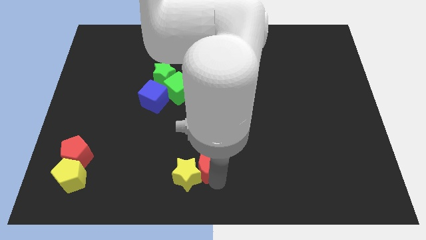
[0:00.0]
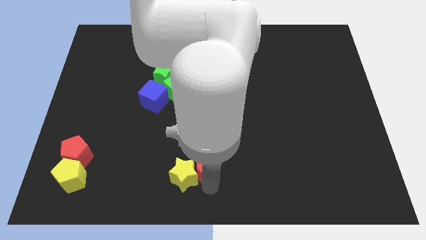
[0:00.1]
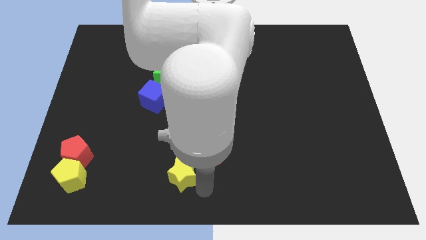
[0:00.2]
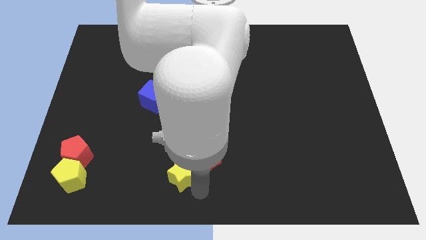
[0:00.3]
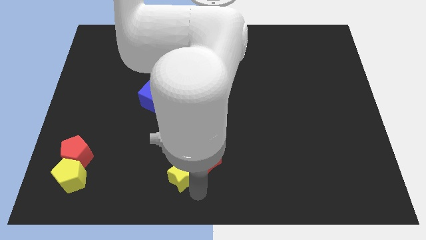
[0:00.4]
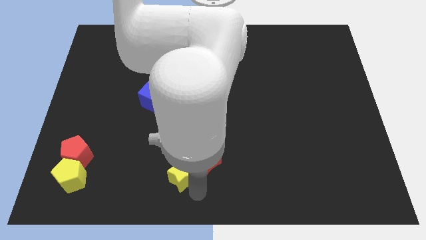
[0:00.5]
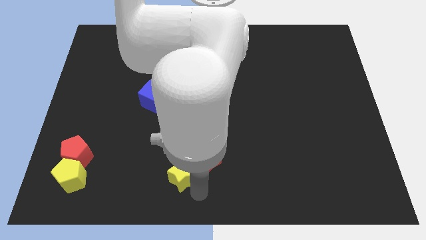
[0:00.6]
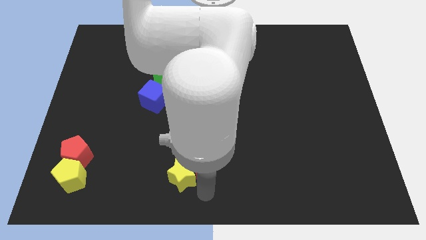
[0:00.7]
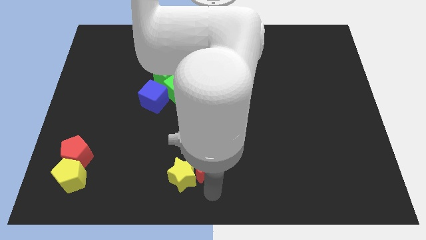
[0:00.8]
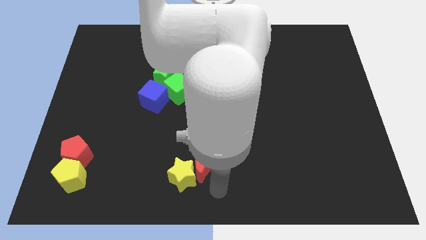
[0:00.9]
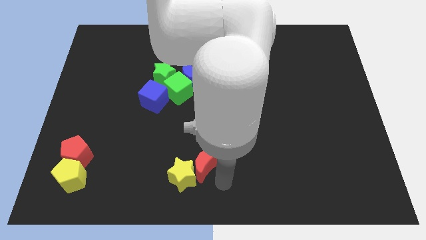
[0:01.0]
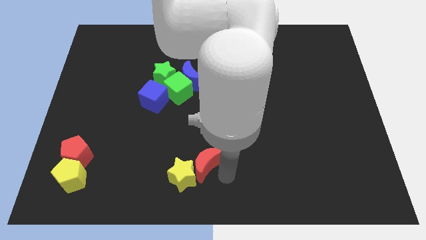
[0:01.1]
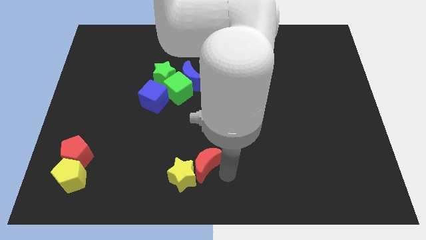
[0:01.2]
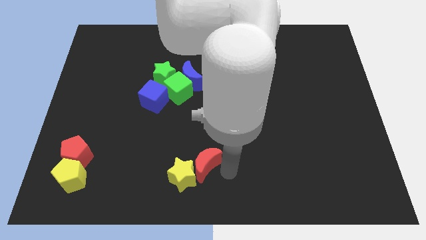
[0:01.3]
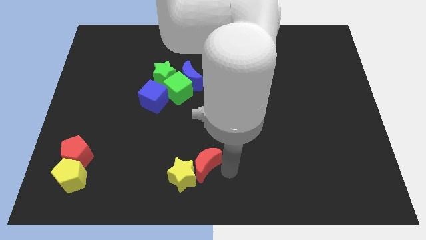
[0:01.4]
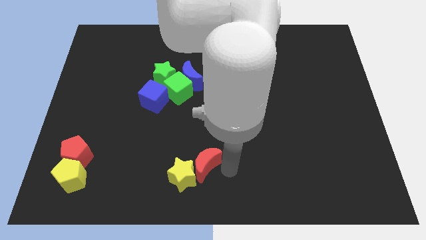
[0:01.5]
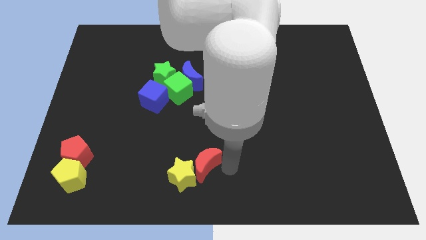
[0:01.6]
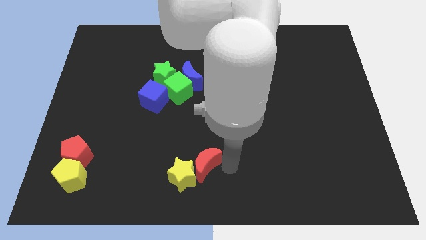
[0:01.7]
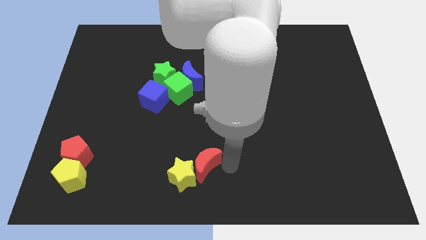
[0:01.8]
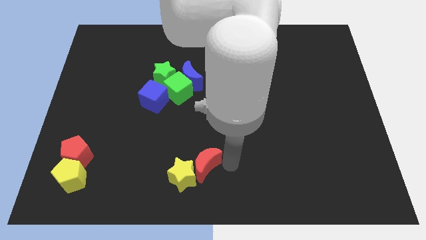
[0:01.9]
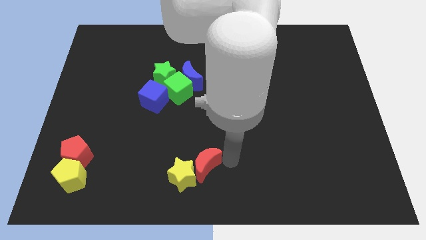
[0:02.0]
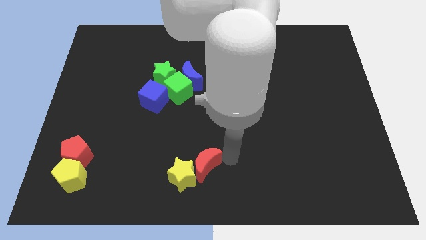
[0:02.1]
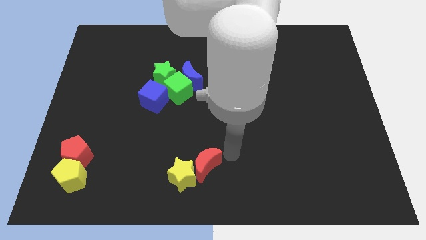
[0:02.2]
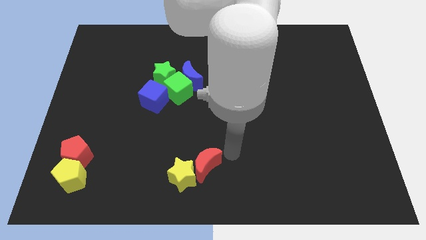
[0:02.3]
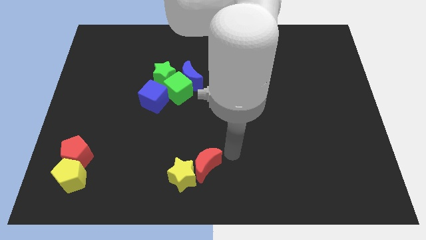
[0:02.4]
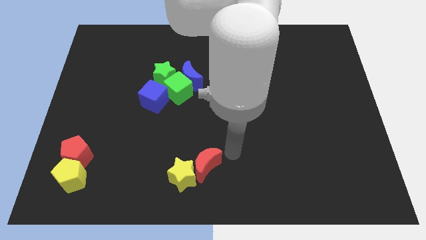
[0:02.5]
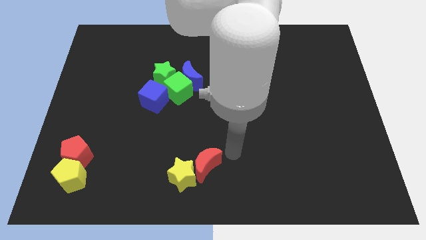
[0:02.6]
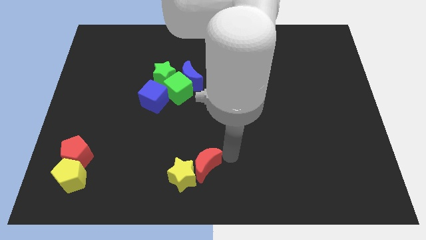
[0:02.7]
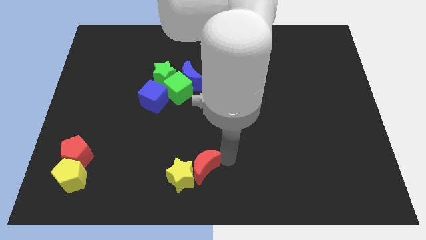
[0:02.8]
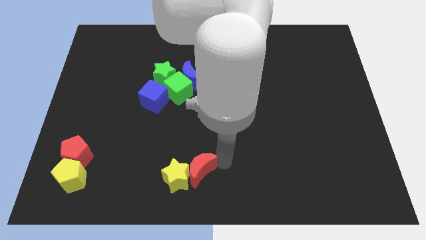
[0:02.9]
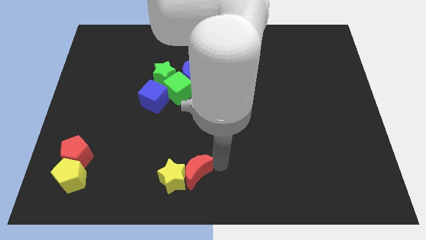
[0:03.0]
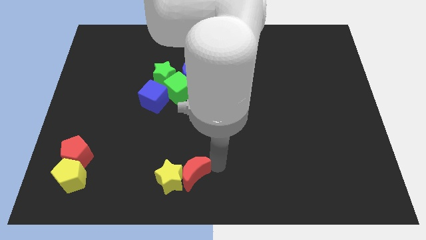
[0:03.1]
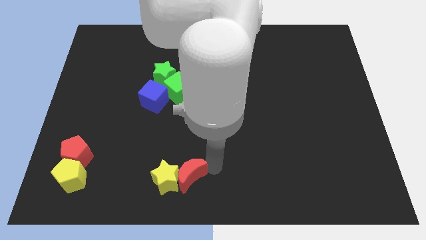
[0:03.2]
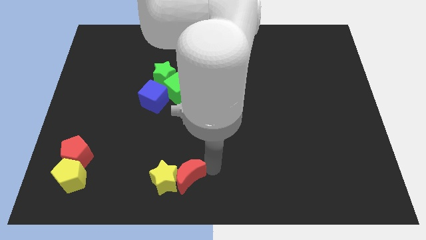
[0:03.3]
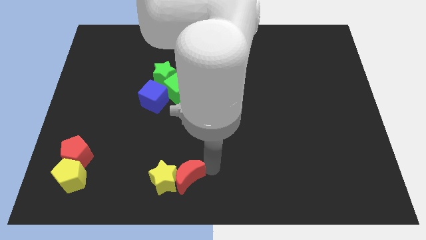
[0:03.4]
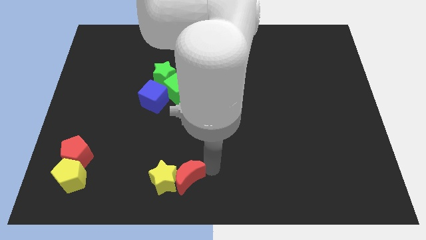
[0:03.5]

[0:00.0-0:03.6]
push the yellow star and red moon slightly to the left side of the board

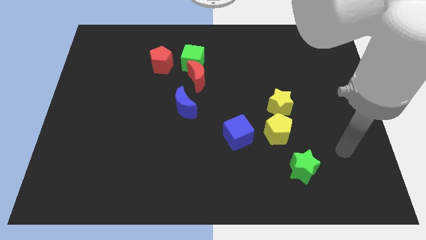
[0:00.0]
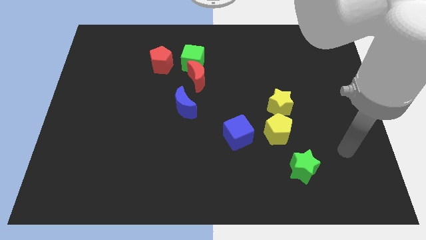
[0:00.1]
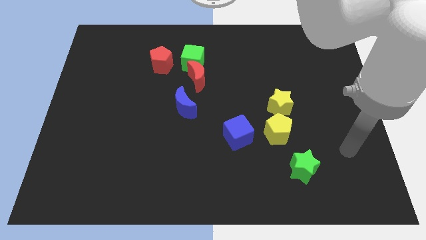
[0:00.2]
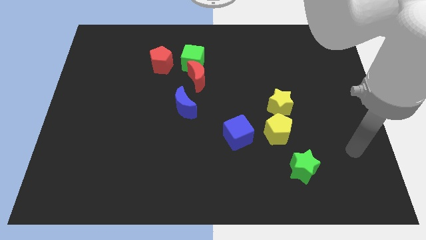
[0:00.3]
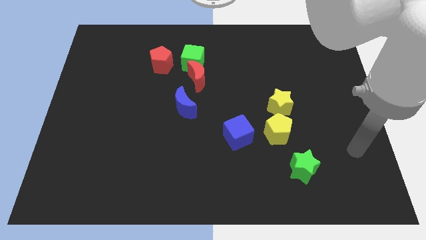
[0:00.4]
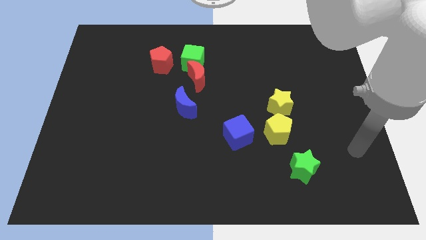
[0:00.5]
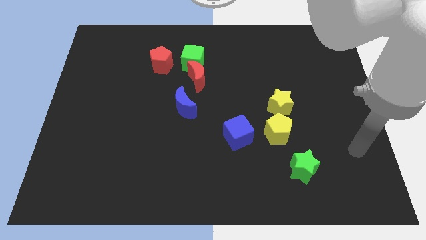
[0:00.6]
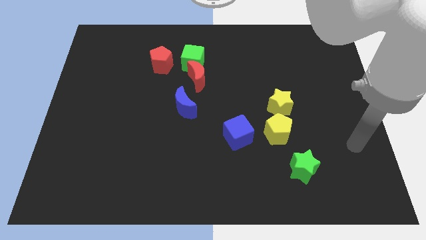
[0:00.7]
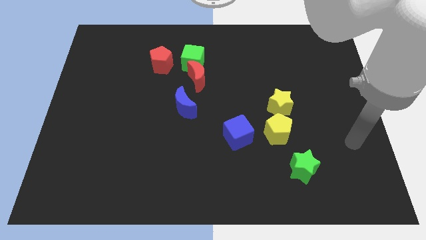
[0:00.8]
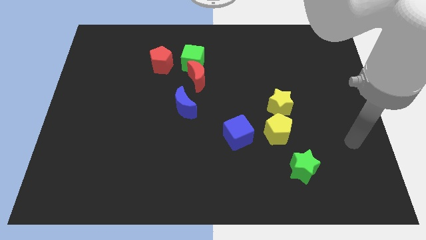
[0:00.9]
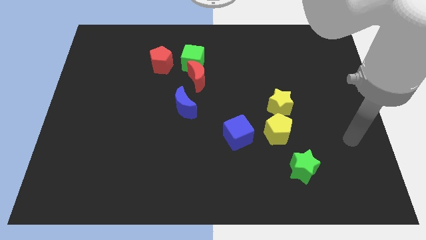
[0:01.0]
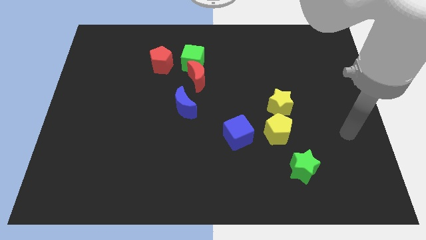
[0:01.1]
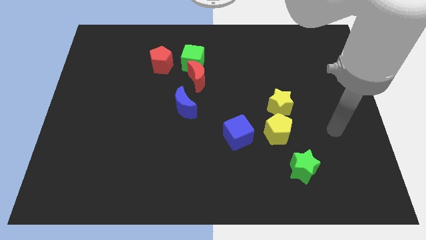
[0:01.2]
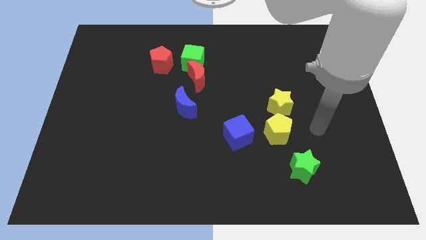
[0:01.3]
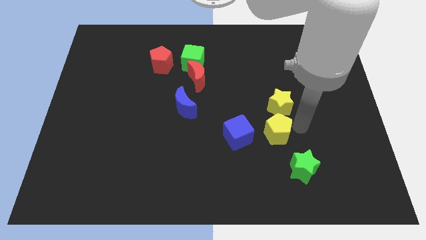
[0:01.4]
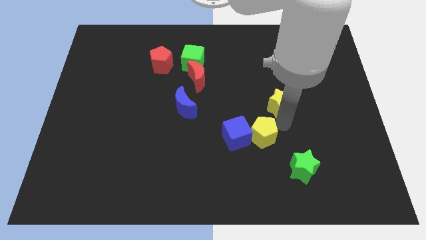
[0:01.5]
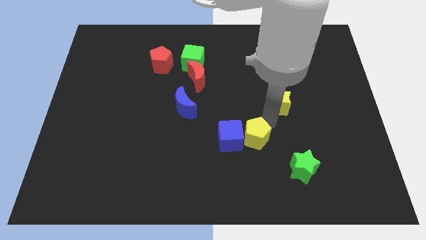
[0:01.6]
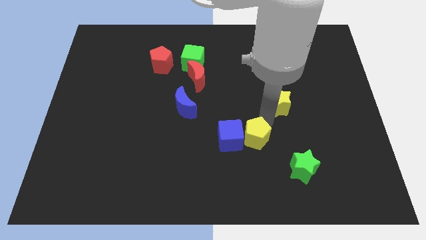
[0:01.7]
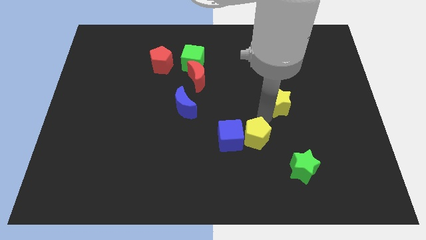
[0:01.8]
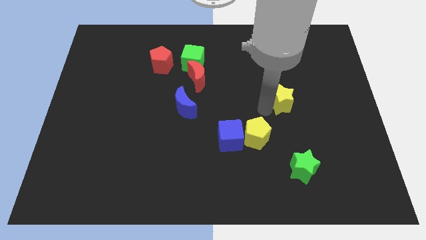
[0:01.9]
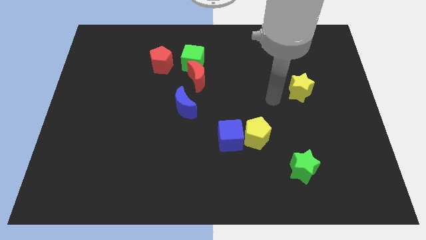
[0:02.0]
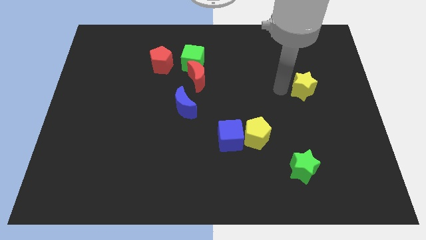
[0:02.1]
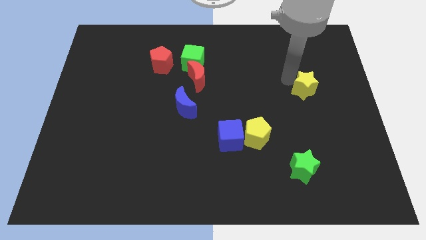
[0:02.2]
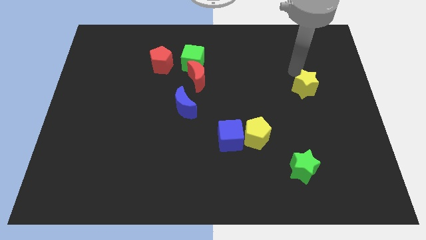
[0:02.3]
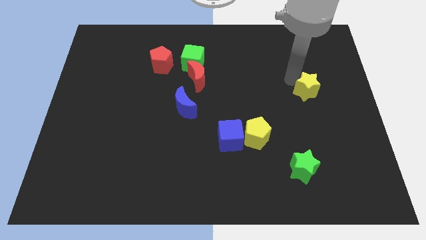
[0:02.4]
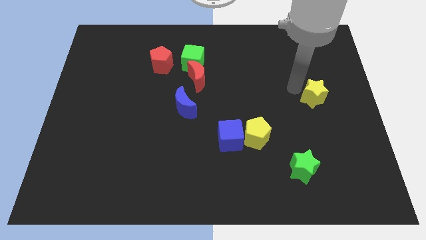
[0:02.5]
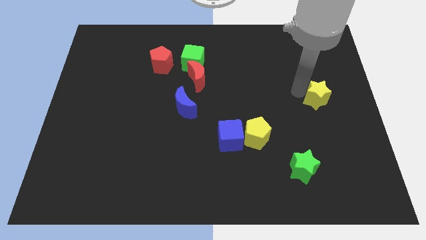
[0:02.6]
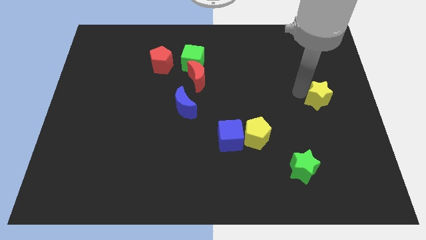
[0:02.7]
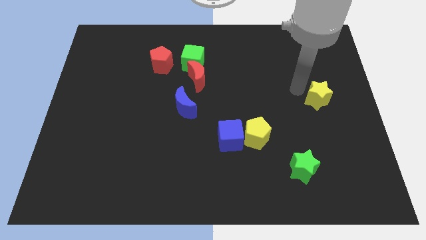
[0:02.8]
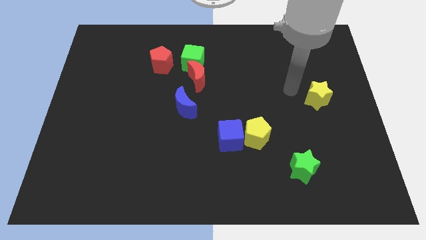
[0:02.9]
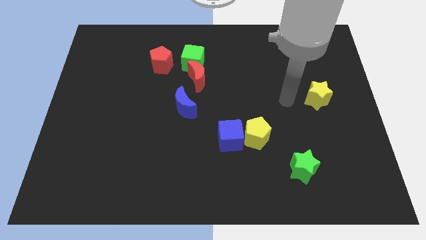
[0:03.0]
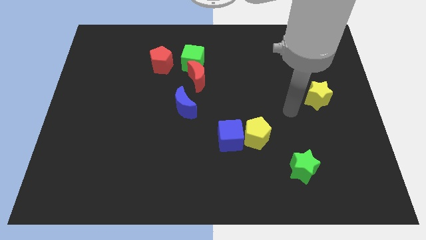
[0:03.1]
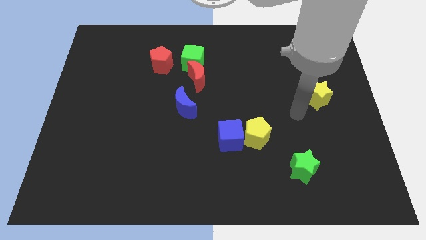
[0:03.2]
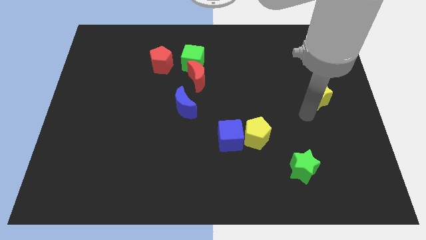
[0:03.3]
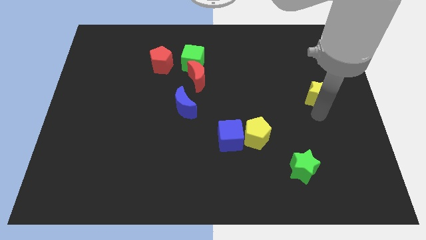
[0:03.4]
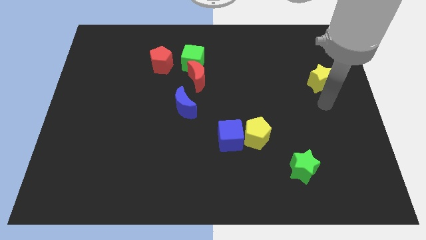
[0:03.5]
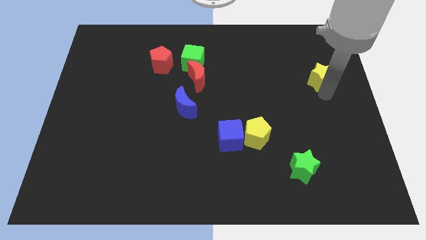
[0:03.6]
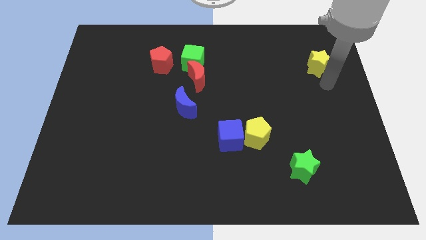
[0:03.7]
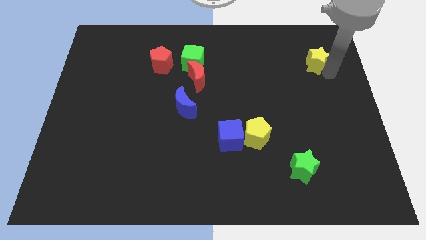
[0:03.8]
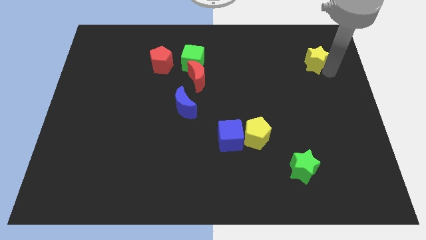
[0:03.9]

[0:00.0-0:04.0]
push the yellow star top right

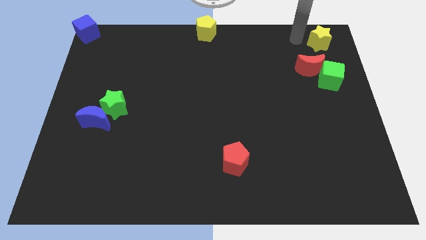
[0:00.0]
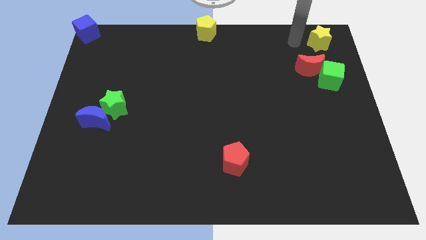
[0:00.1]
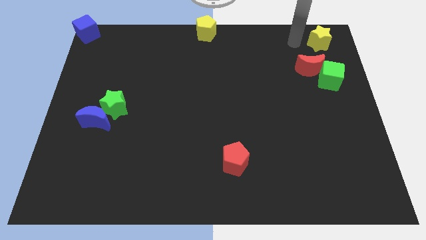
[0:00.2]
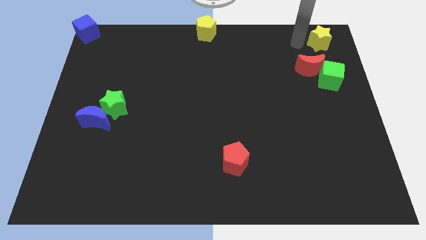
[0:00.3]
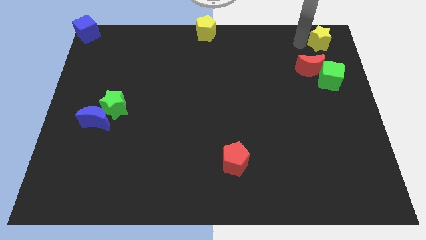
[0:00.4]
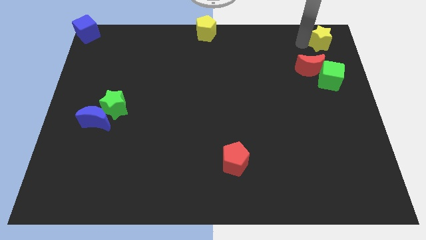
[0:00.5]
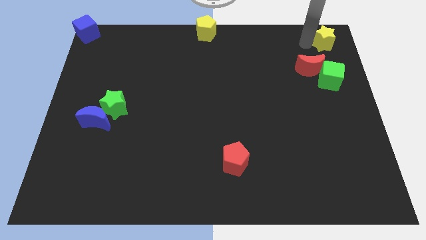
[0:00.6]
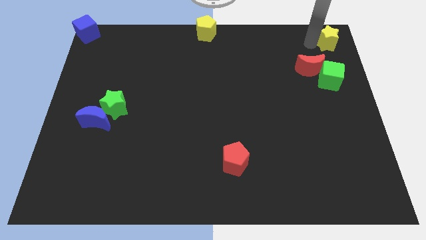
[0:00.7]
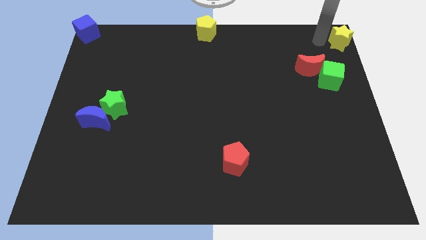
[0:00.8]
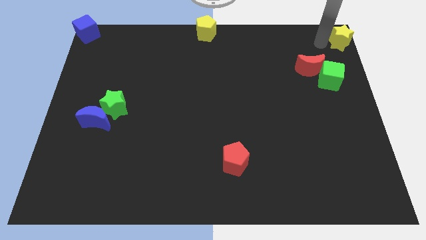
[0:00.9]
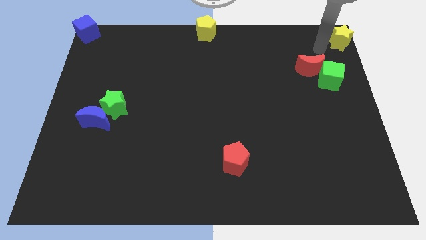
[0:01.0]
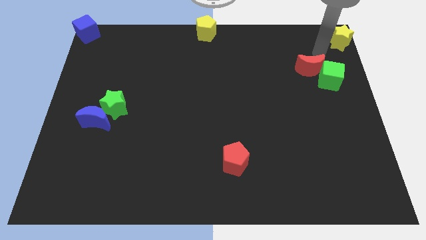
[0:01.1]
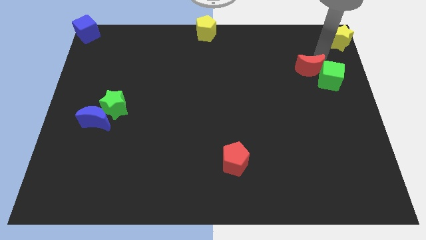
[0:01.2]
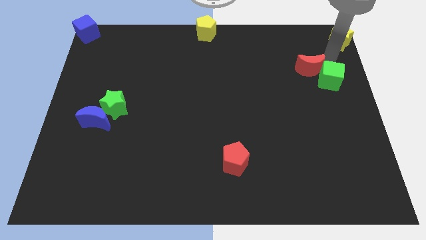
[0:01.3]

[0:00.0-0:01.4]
place the yellow star diagonally top right to the green cube
